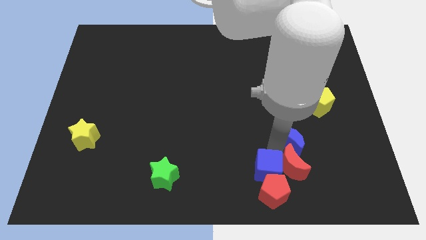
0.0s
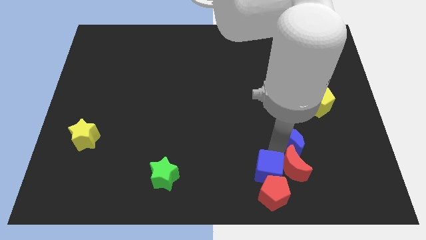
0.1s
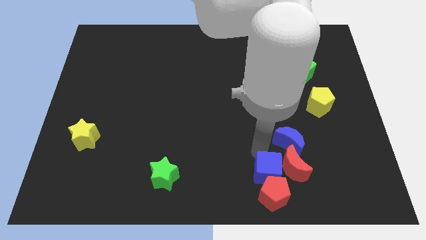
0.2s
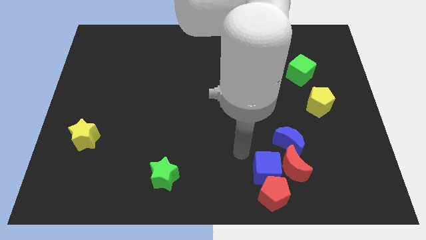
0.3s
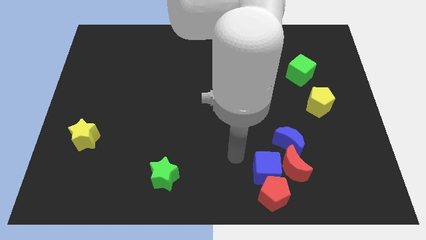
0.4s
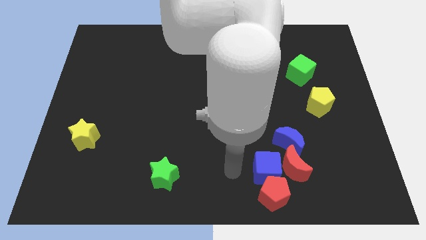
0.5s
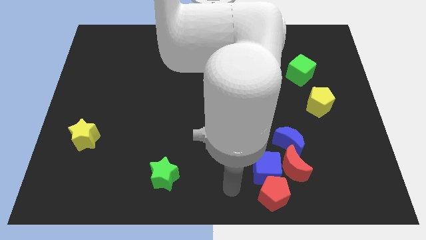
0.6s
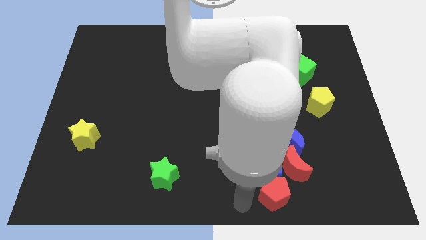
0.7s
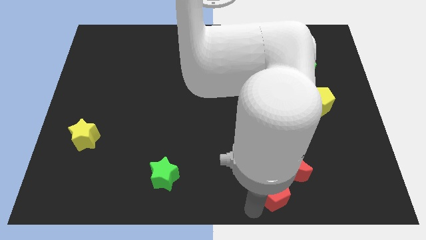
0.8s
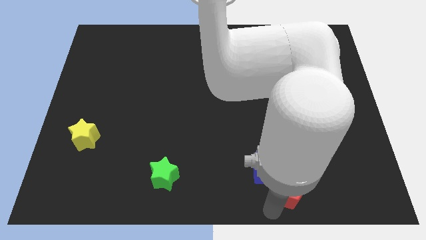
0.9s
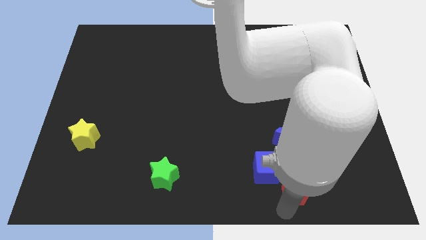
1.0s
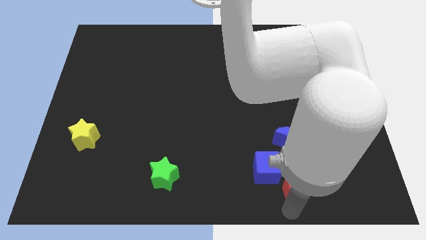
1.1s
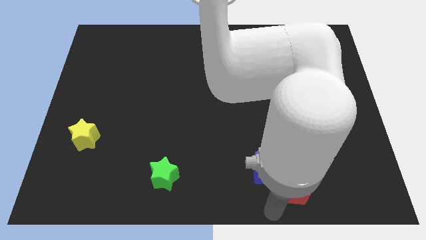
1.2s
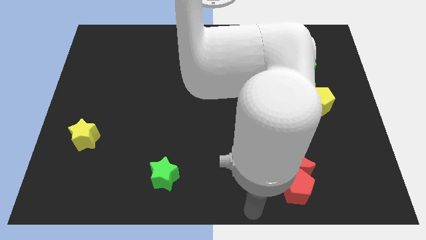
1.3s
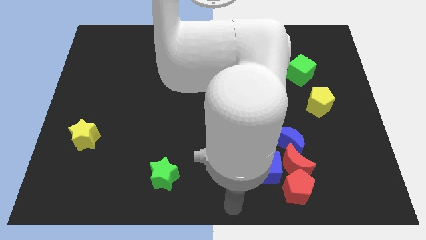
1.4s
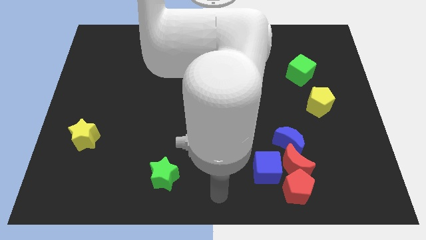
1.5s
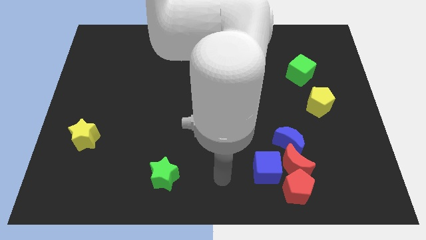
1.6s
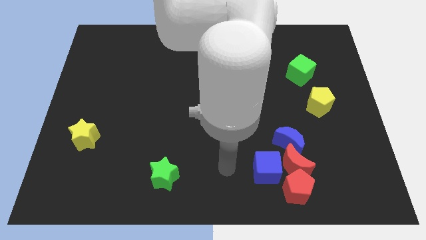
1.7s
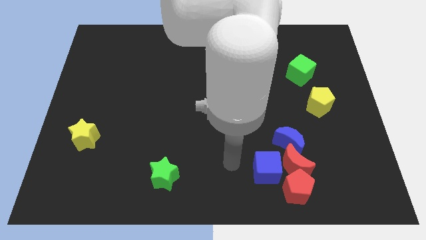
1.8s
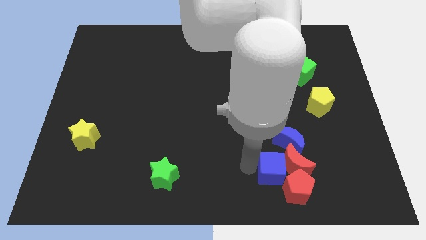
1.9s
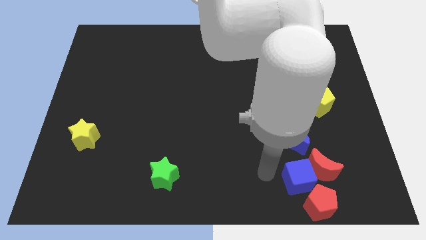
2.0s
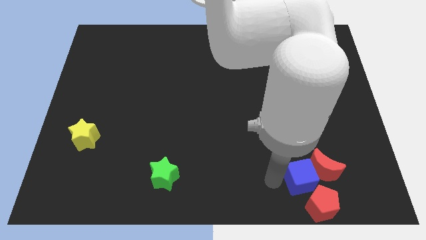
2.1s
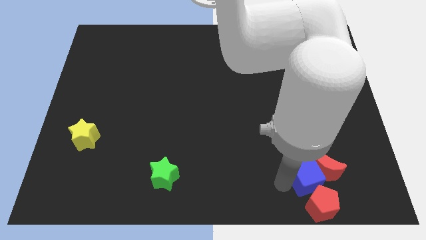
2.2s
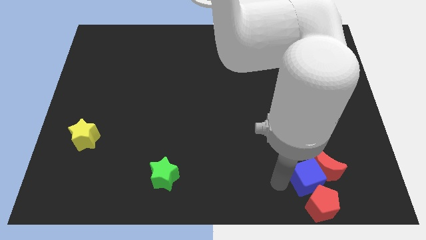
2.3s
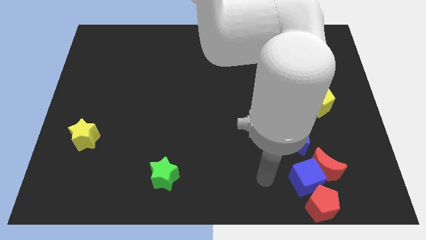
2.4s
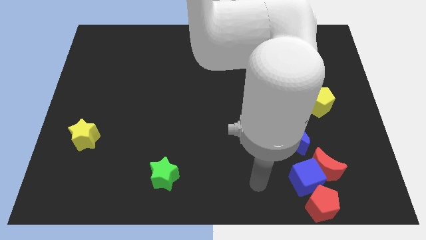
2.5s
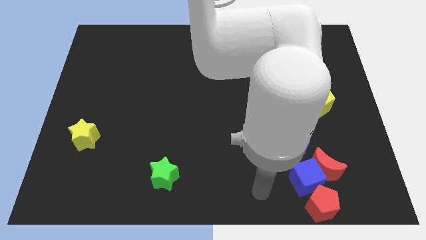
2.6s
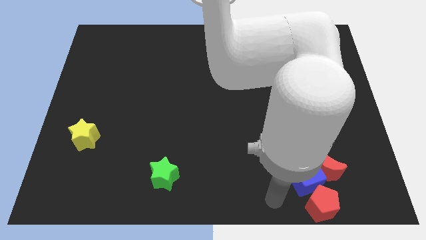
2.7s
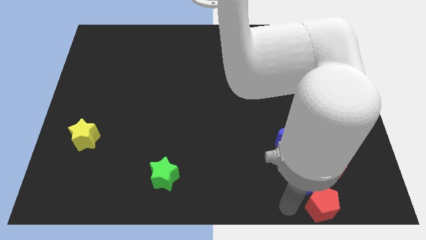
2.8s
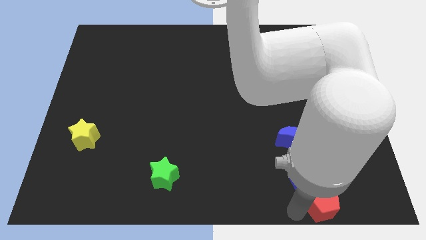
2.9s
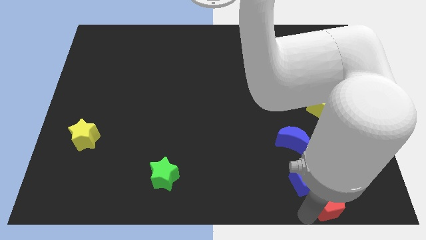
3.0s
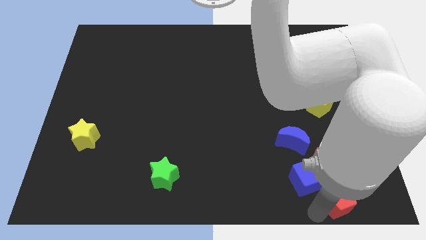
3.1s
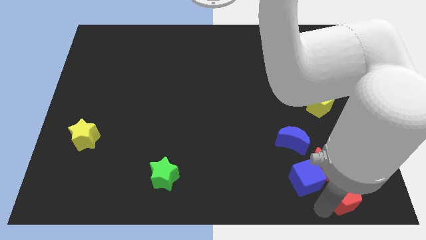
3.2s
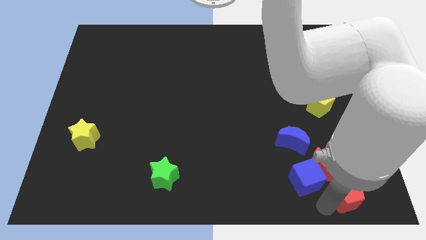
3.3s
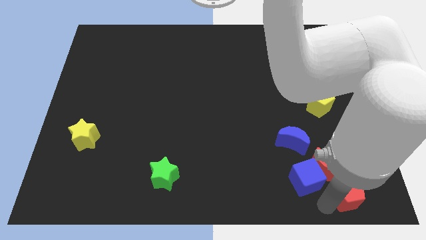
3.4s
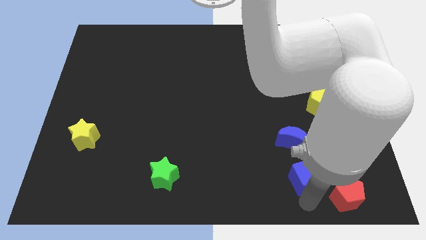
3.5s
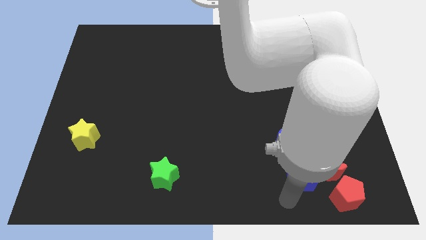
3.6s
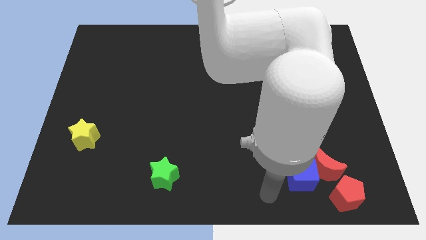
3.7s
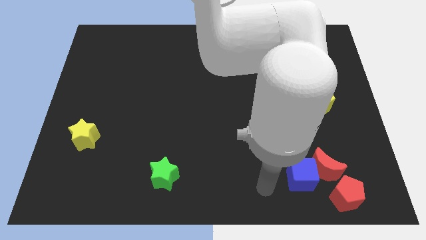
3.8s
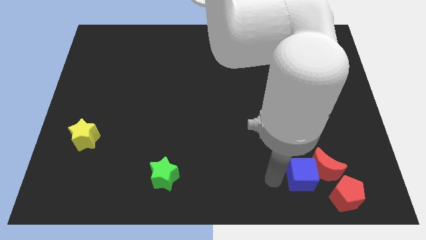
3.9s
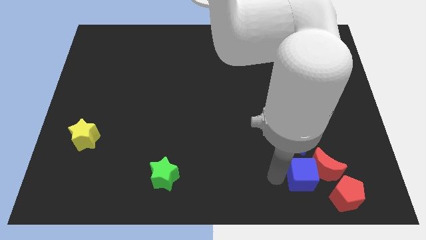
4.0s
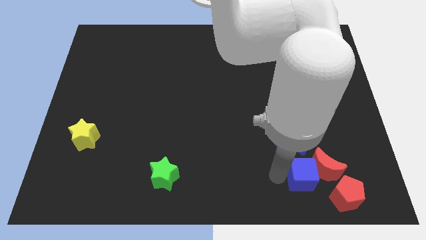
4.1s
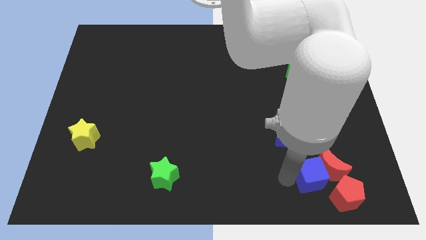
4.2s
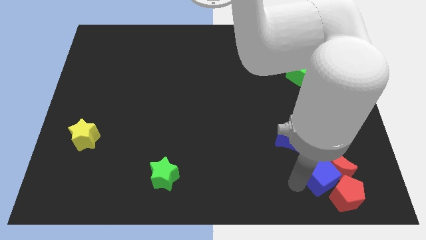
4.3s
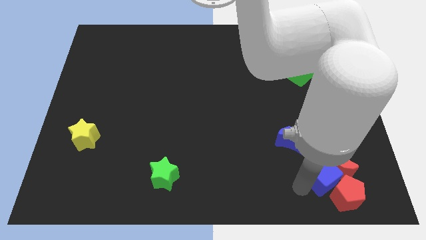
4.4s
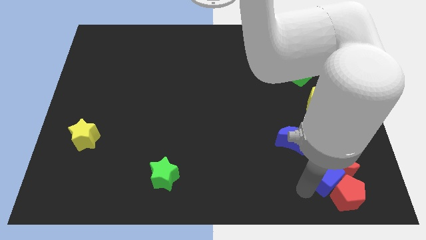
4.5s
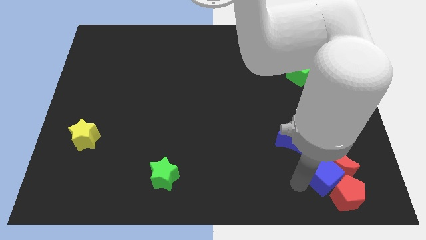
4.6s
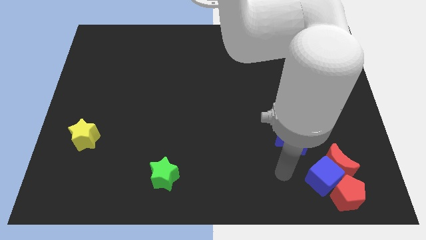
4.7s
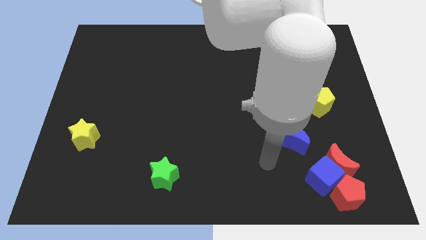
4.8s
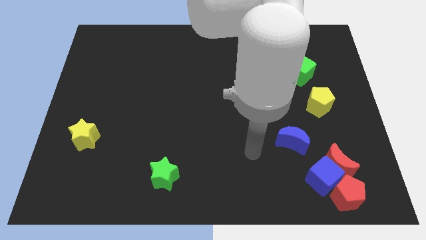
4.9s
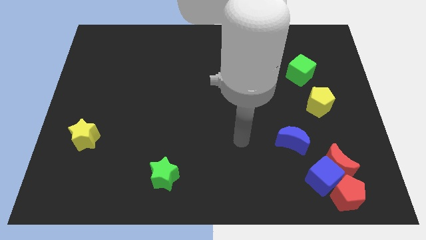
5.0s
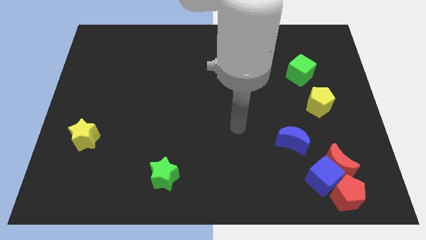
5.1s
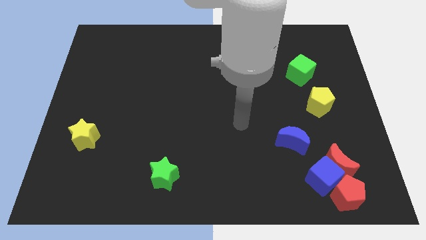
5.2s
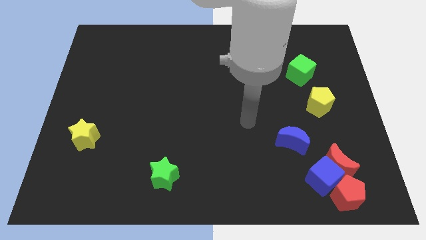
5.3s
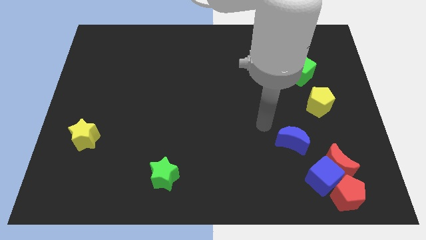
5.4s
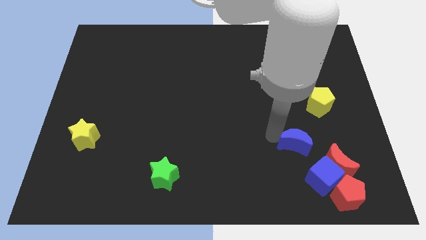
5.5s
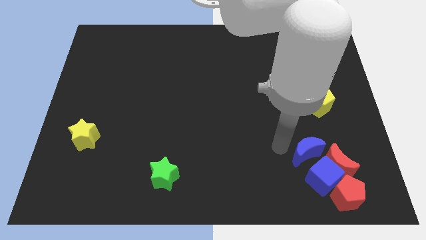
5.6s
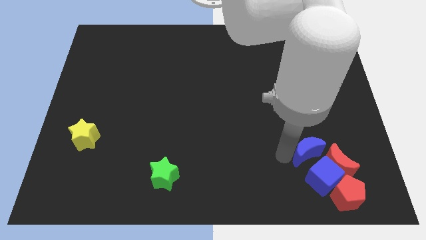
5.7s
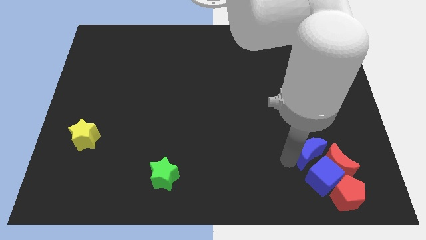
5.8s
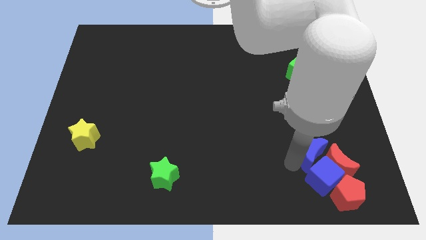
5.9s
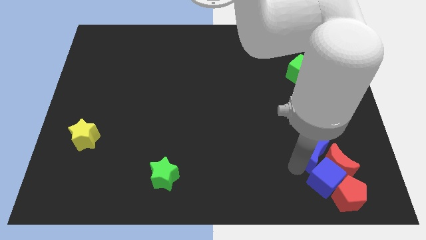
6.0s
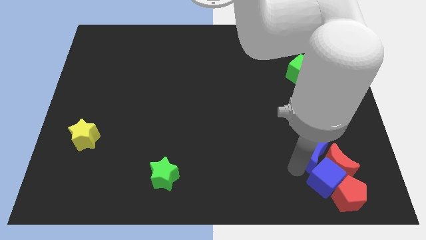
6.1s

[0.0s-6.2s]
push red and blue blocks towards the bottom right side of the board

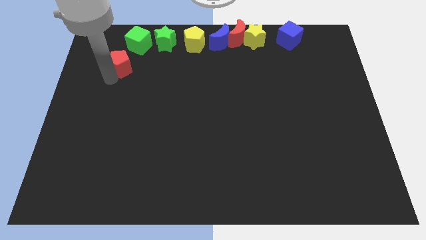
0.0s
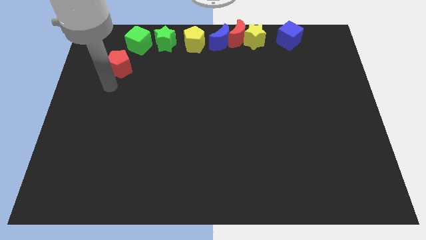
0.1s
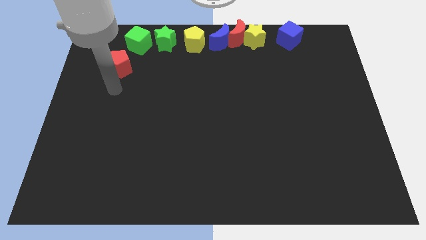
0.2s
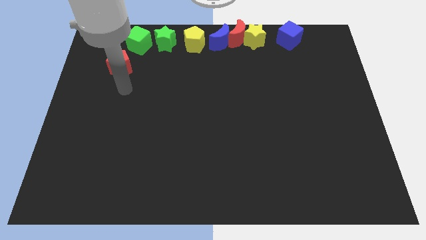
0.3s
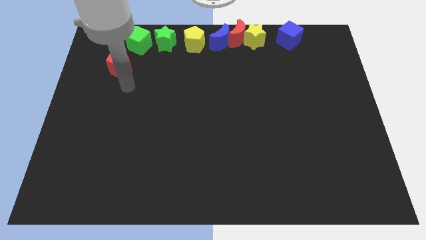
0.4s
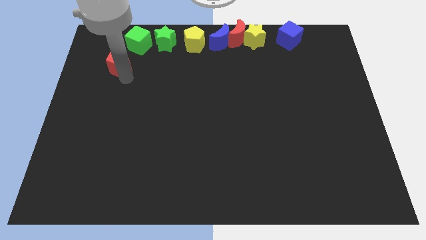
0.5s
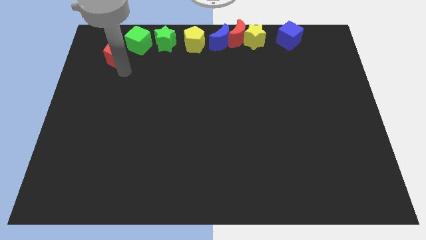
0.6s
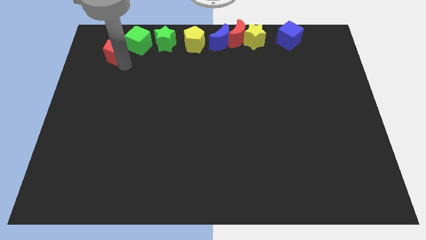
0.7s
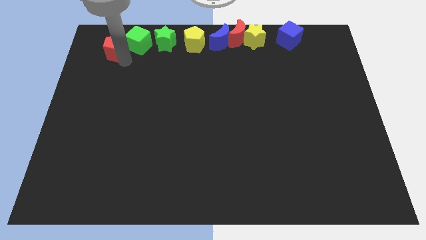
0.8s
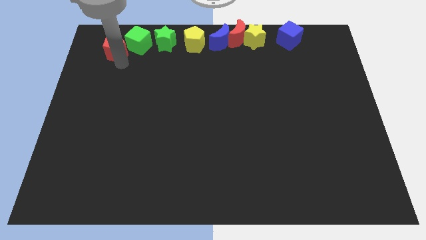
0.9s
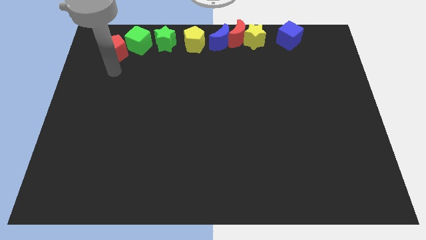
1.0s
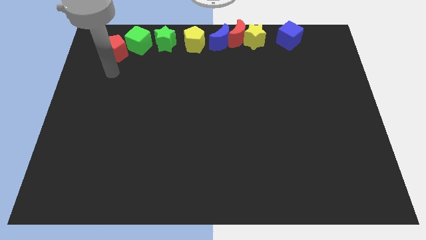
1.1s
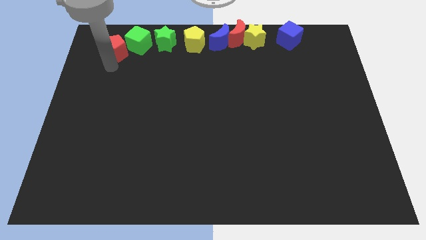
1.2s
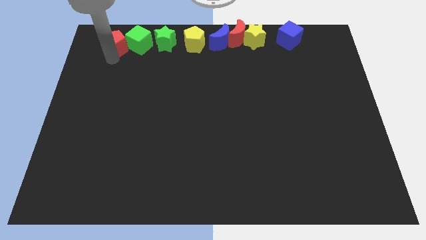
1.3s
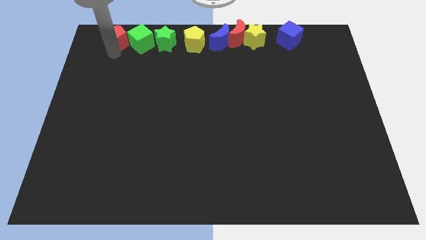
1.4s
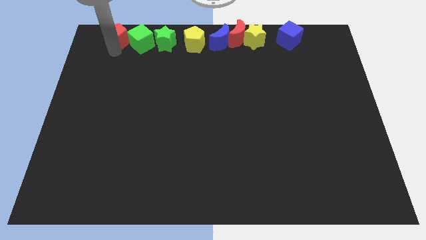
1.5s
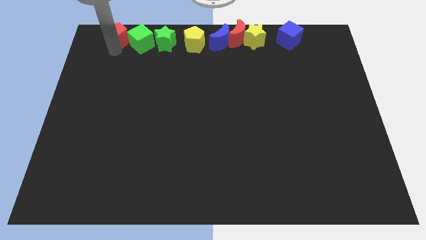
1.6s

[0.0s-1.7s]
place the red pentagon to the left side of green cube

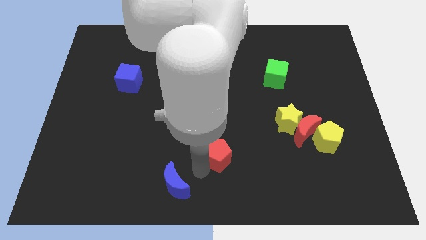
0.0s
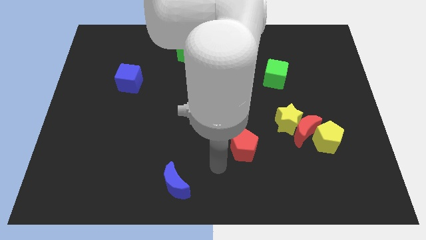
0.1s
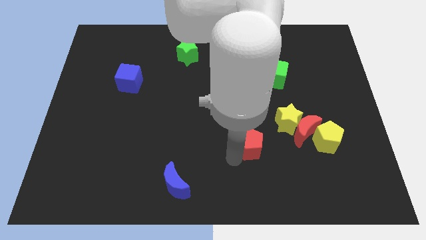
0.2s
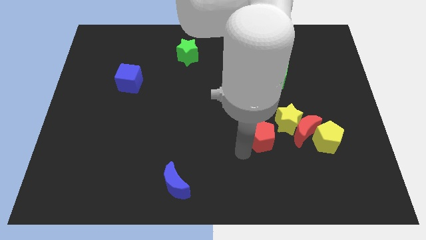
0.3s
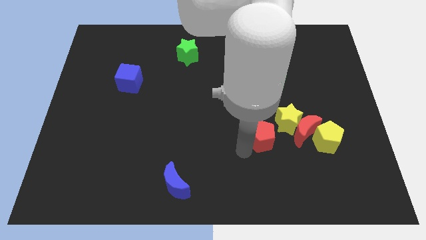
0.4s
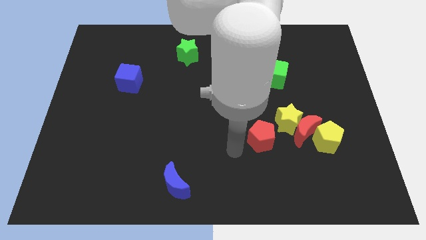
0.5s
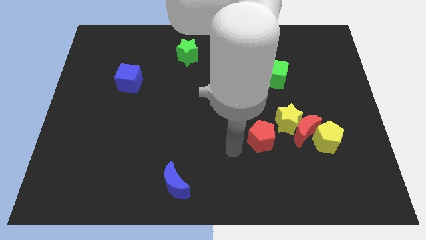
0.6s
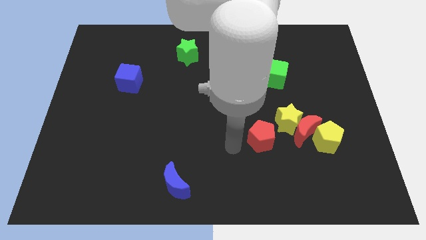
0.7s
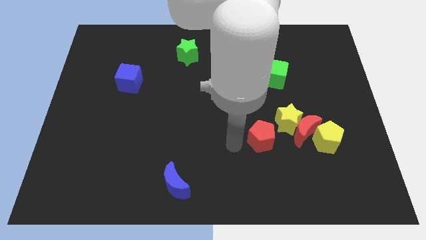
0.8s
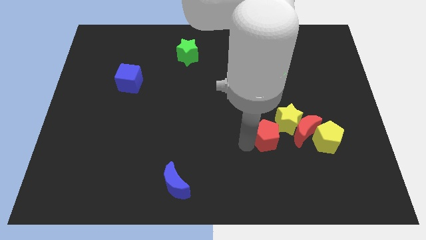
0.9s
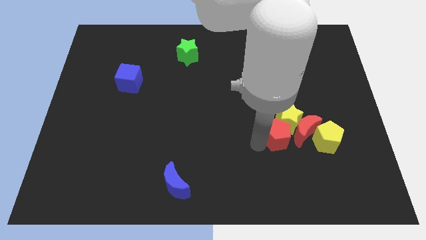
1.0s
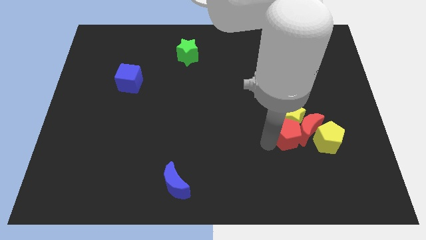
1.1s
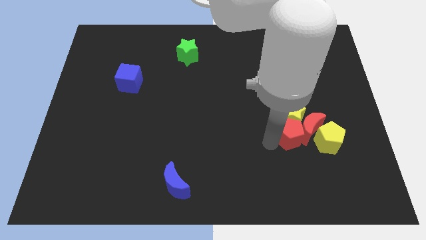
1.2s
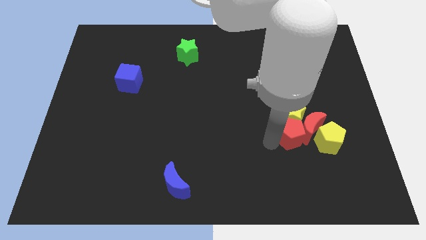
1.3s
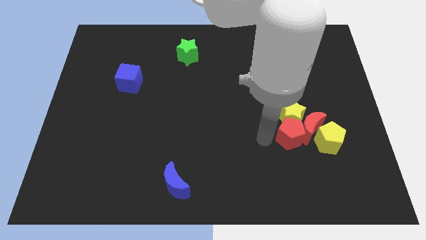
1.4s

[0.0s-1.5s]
push the red pentagon into the red crescent
